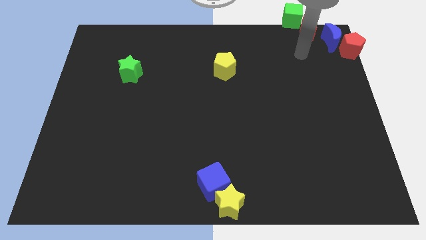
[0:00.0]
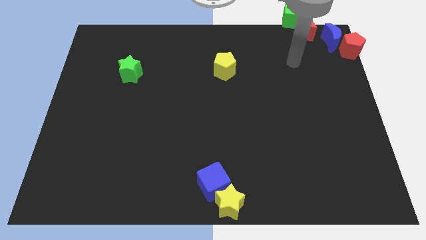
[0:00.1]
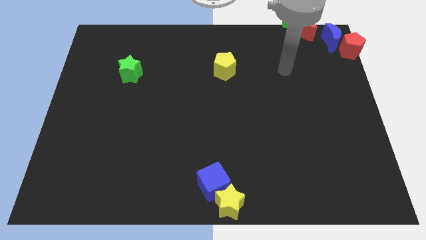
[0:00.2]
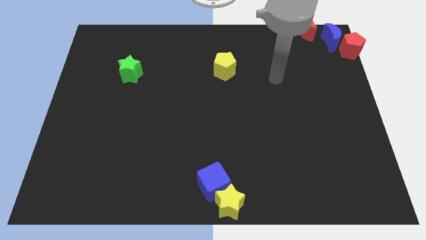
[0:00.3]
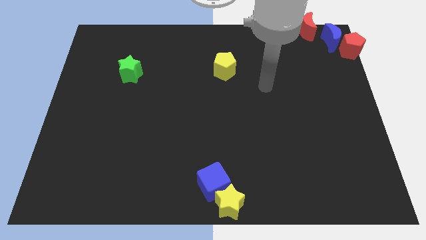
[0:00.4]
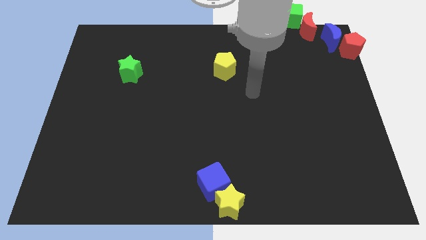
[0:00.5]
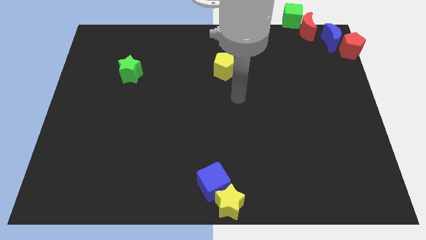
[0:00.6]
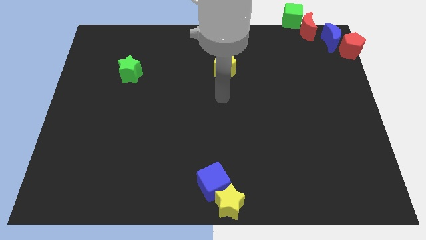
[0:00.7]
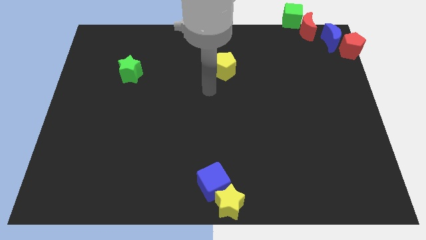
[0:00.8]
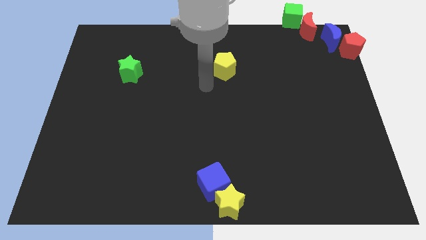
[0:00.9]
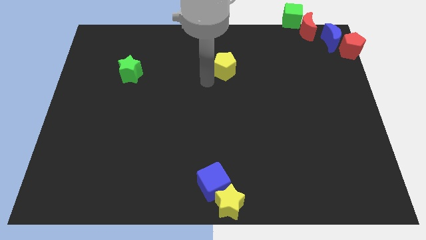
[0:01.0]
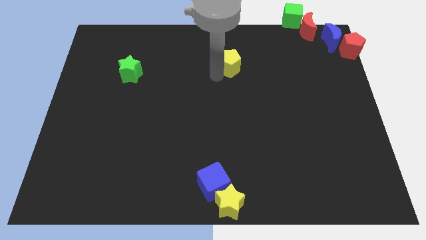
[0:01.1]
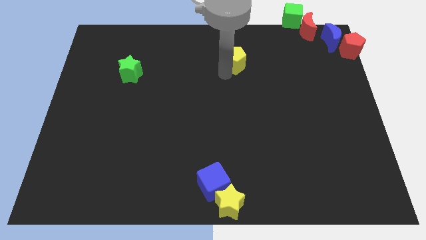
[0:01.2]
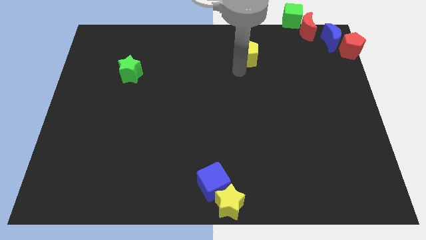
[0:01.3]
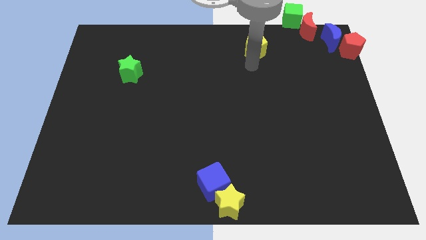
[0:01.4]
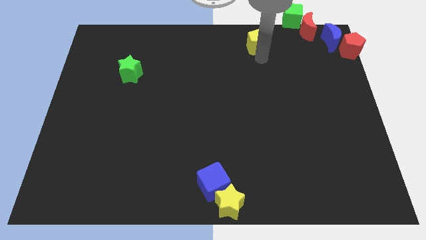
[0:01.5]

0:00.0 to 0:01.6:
drag the yellow pentagon towards the green cube

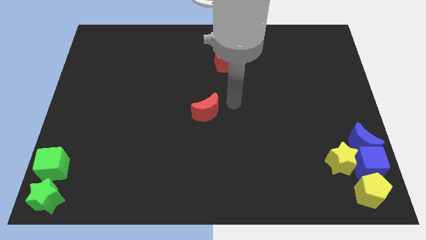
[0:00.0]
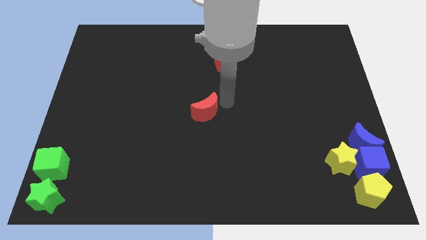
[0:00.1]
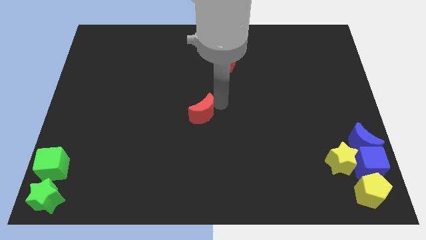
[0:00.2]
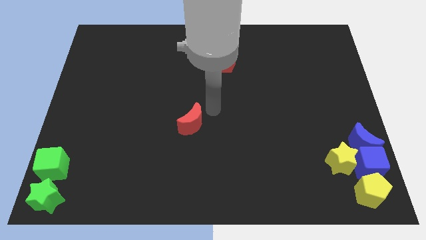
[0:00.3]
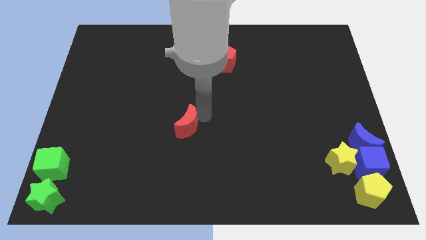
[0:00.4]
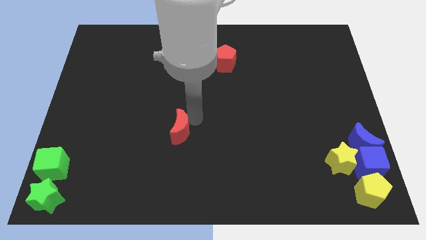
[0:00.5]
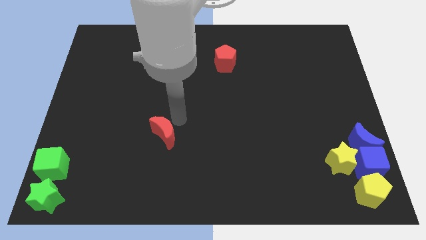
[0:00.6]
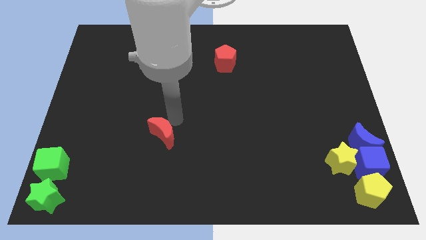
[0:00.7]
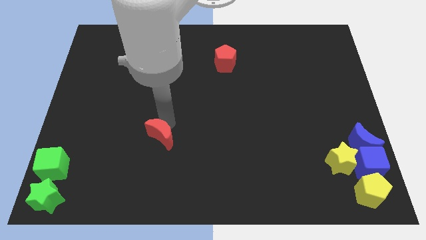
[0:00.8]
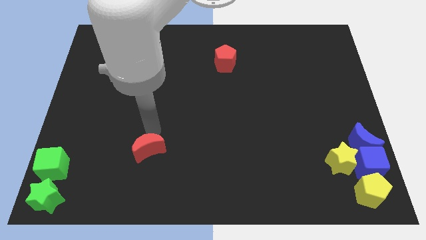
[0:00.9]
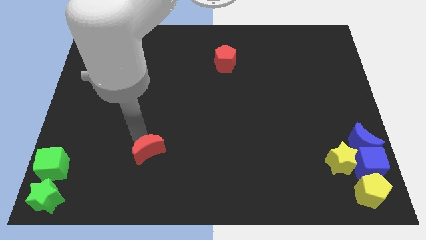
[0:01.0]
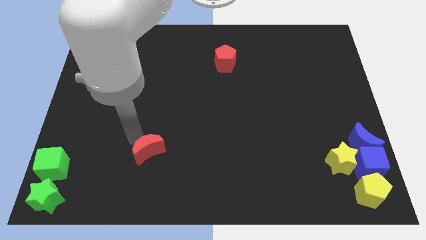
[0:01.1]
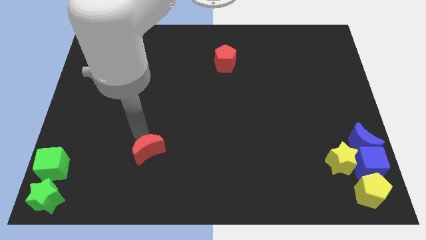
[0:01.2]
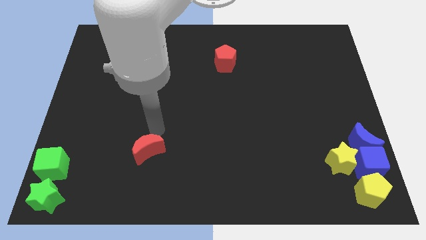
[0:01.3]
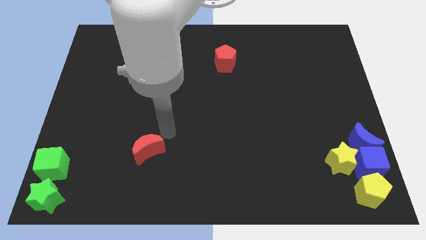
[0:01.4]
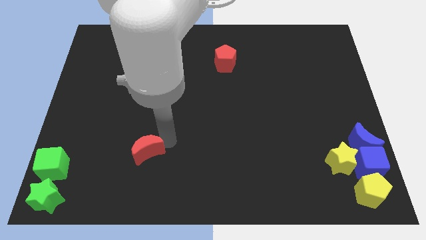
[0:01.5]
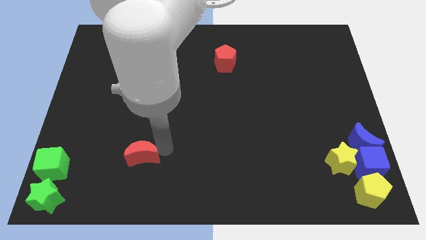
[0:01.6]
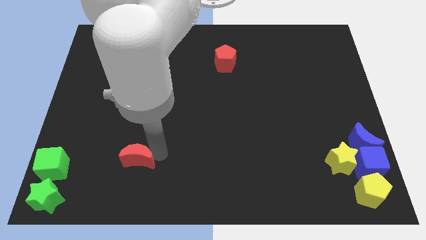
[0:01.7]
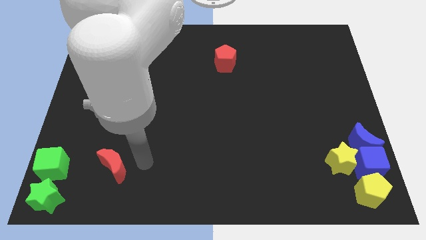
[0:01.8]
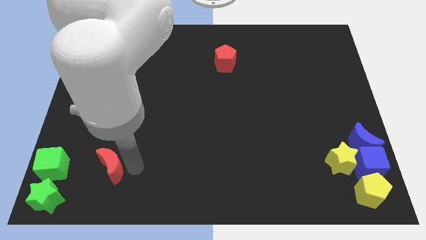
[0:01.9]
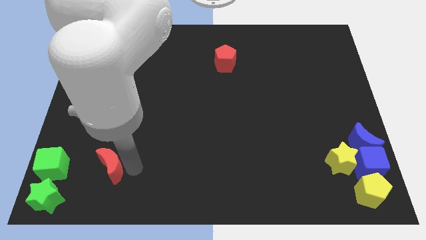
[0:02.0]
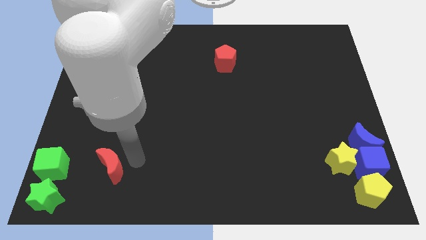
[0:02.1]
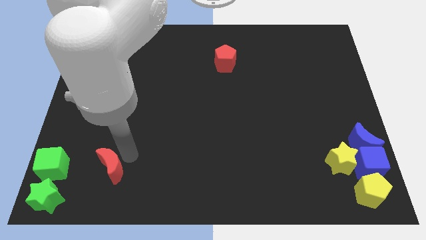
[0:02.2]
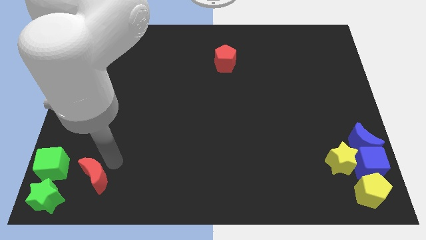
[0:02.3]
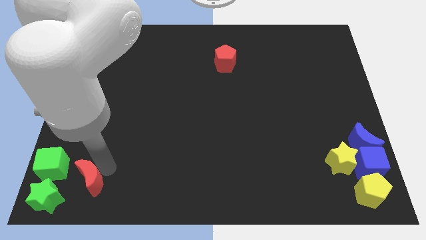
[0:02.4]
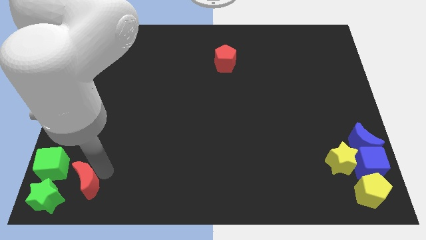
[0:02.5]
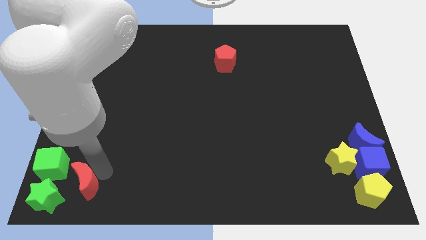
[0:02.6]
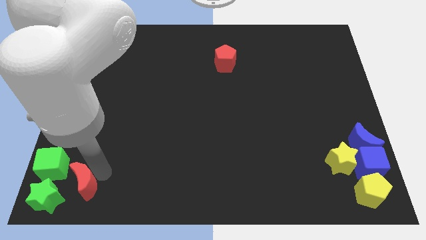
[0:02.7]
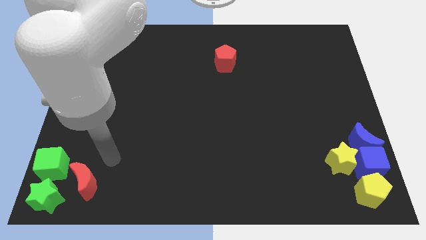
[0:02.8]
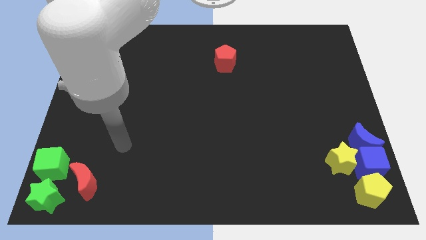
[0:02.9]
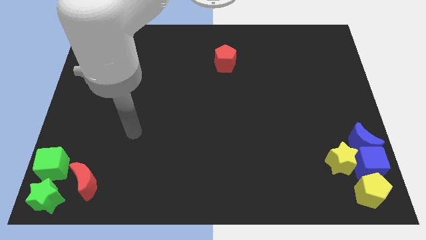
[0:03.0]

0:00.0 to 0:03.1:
move red moon parallel to the green star

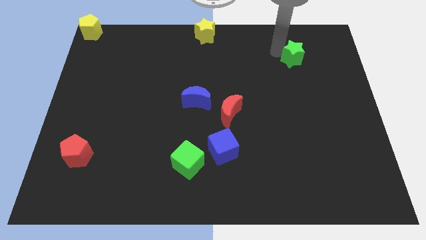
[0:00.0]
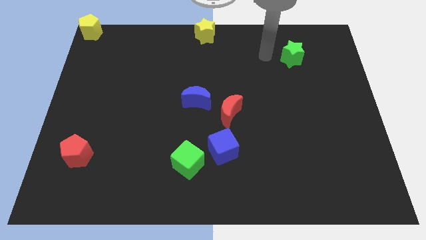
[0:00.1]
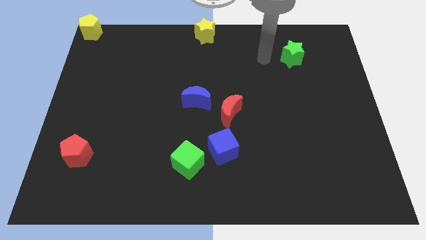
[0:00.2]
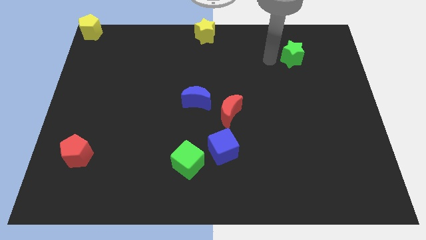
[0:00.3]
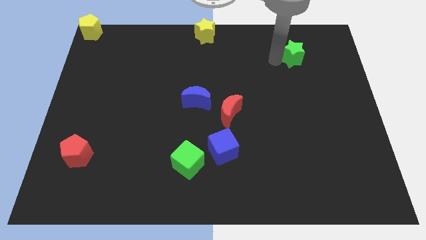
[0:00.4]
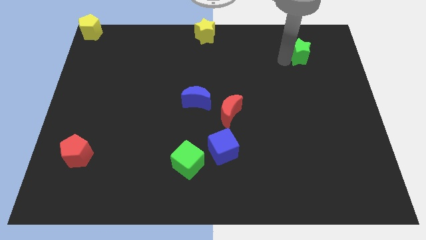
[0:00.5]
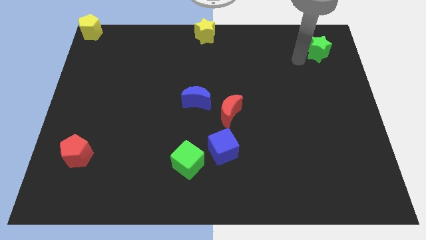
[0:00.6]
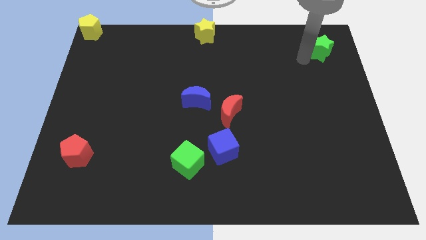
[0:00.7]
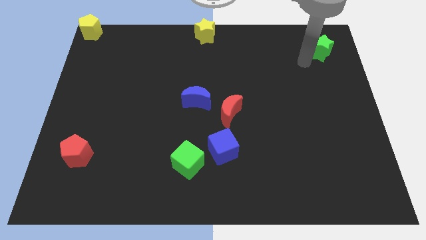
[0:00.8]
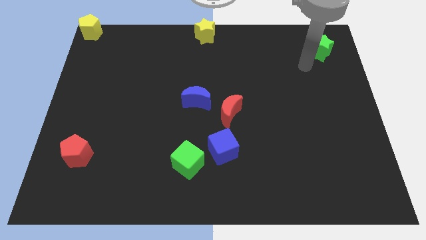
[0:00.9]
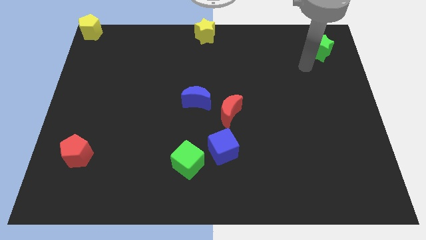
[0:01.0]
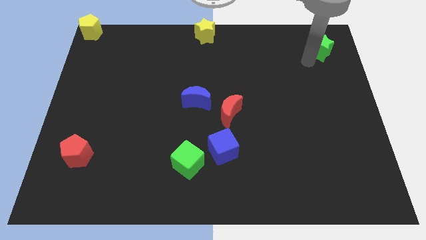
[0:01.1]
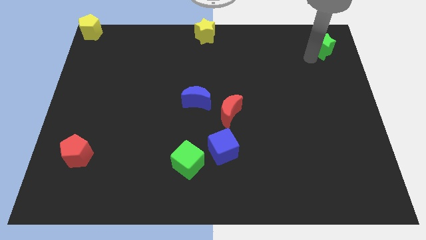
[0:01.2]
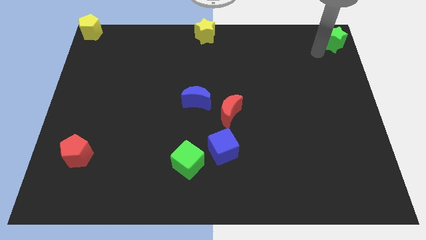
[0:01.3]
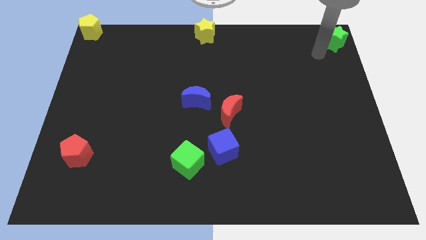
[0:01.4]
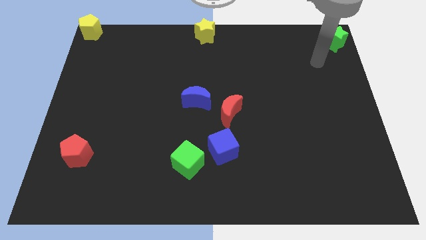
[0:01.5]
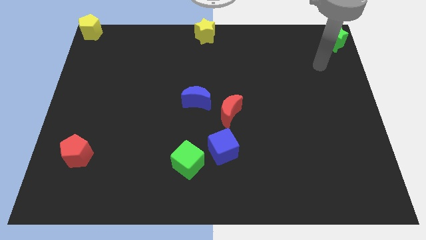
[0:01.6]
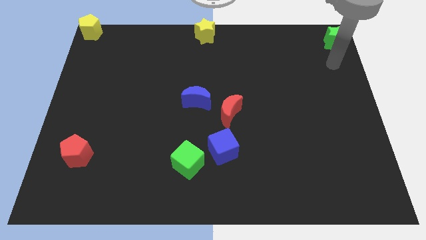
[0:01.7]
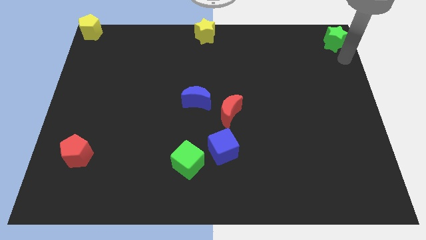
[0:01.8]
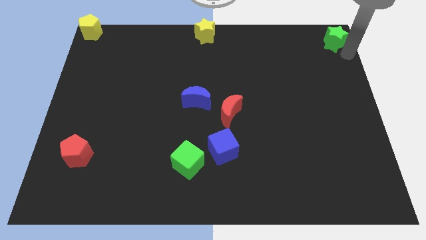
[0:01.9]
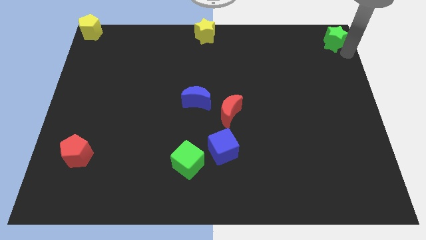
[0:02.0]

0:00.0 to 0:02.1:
move the green star to the to right

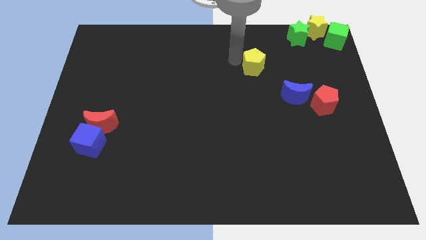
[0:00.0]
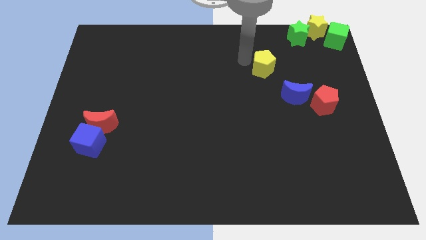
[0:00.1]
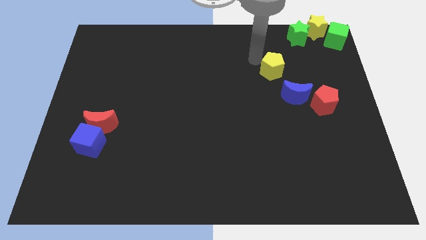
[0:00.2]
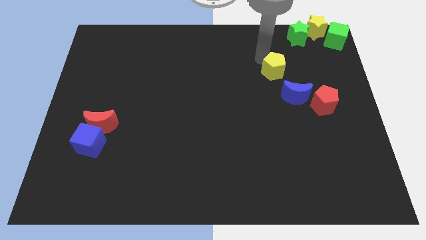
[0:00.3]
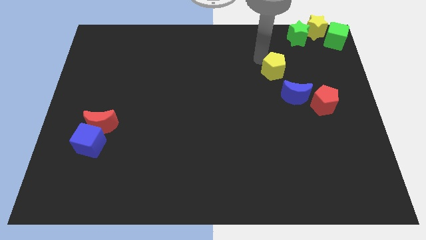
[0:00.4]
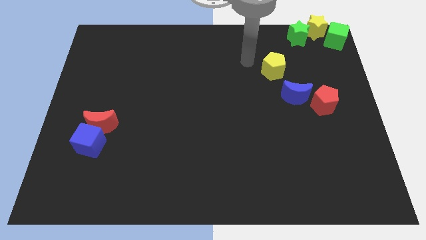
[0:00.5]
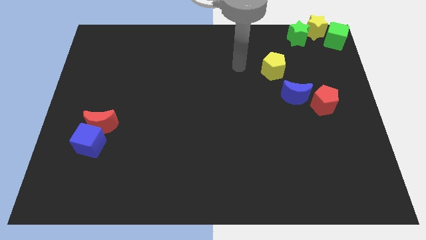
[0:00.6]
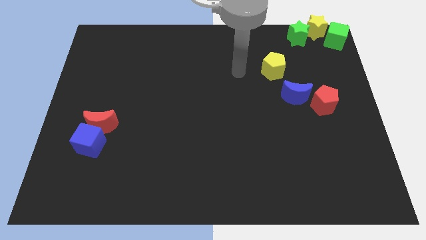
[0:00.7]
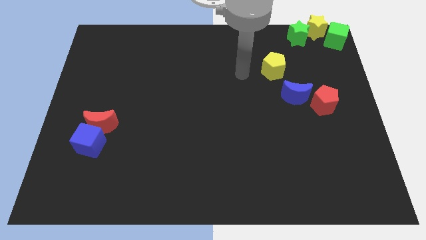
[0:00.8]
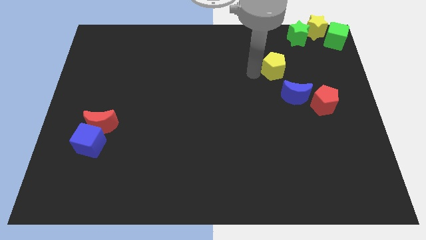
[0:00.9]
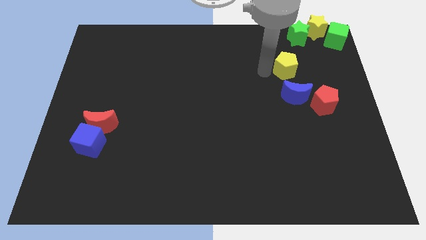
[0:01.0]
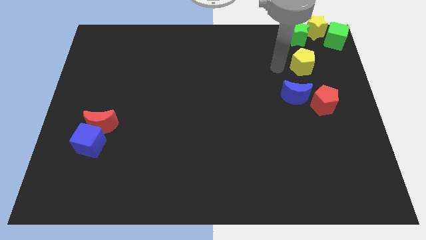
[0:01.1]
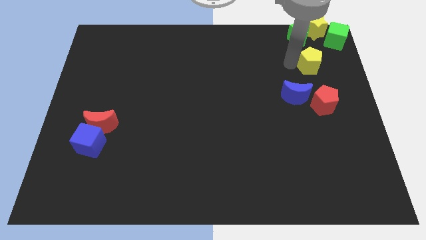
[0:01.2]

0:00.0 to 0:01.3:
push the yellow pentagon to center right

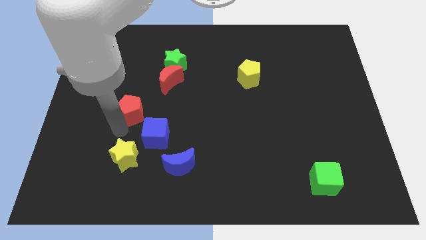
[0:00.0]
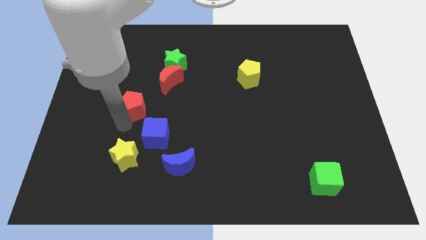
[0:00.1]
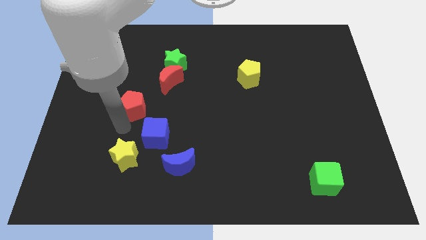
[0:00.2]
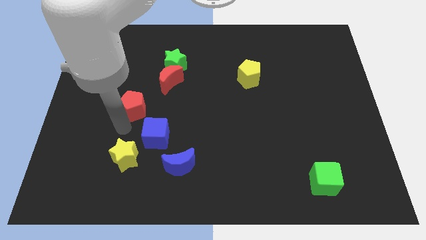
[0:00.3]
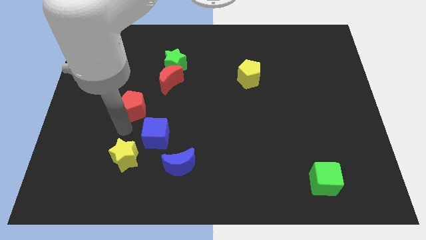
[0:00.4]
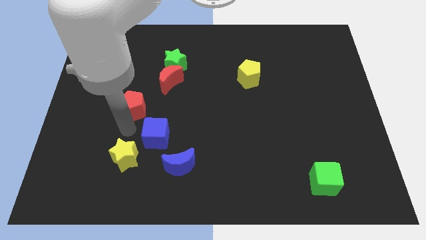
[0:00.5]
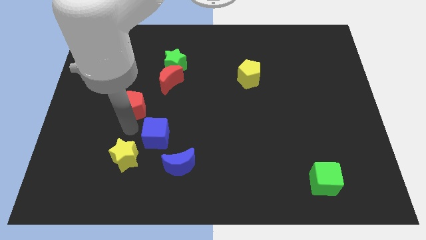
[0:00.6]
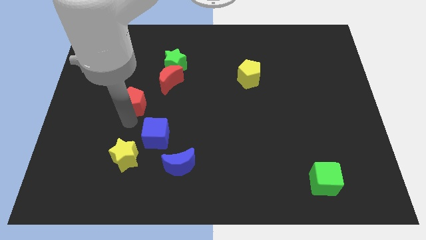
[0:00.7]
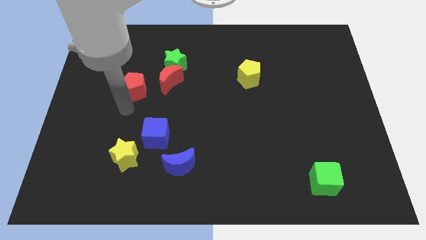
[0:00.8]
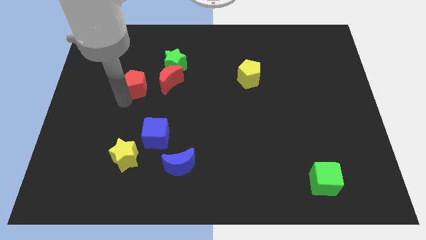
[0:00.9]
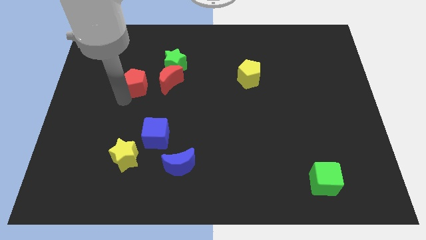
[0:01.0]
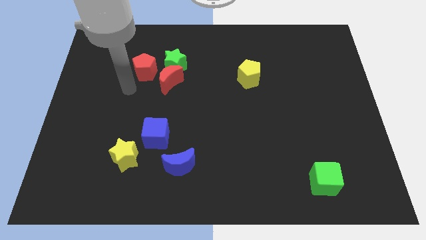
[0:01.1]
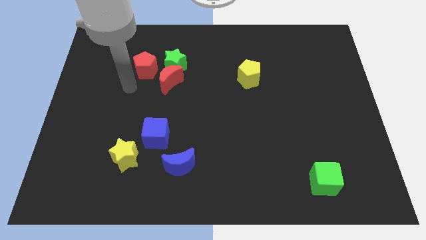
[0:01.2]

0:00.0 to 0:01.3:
move the red penatgon to the bottom left of the green star
